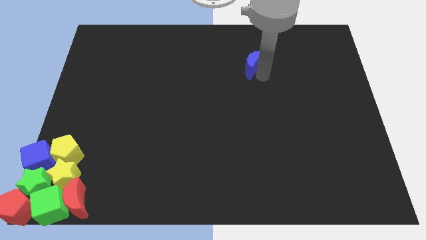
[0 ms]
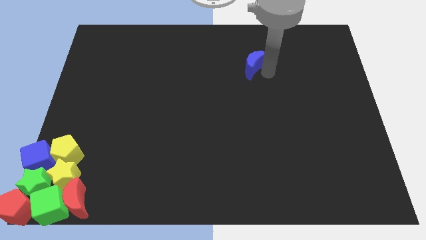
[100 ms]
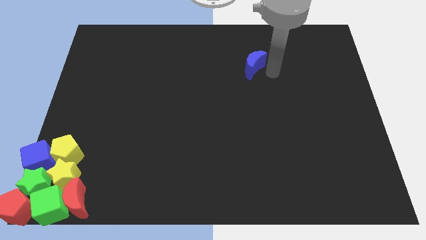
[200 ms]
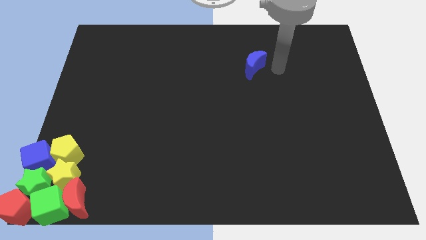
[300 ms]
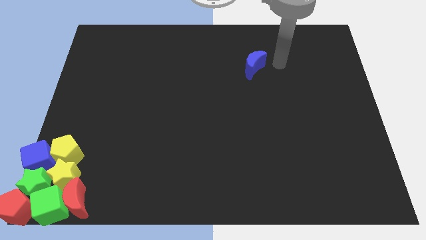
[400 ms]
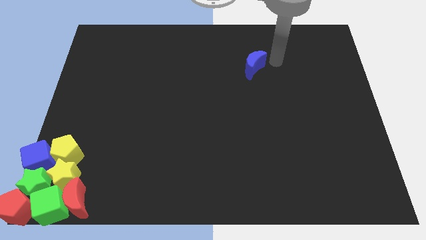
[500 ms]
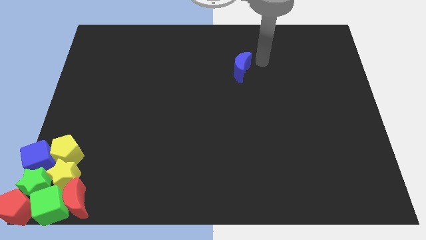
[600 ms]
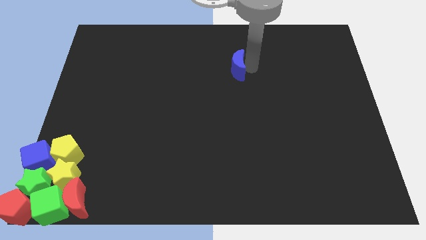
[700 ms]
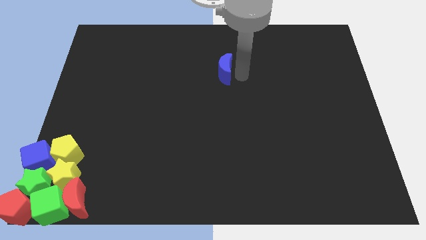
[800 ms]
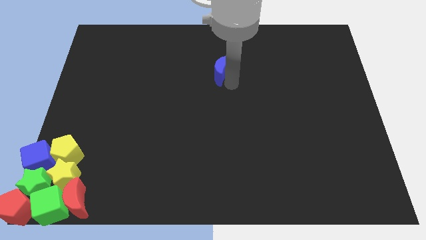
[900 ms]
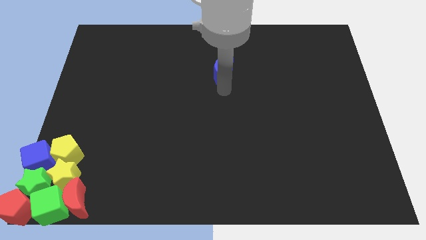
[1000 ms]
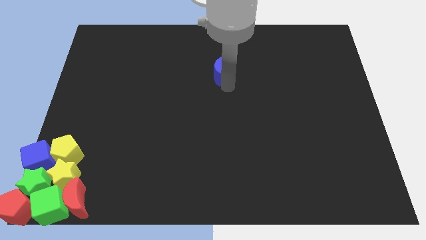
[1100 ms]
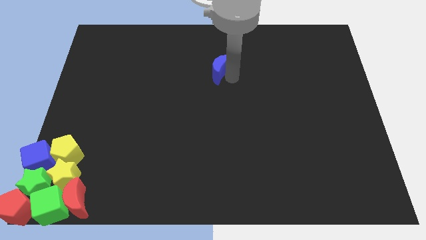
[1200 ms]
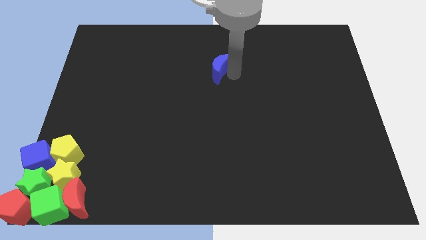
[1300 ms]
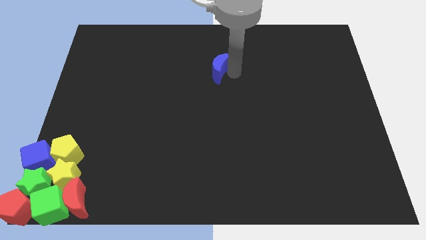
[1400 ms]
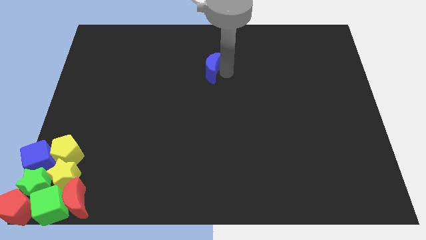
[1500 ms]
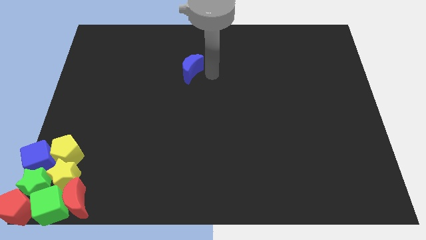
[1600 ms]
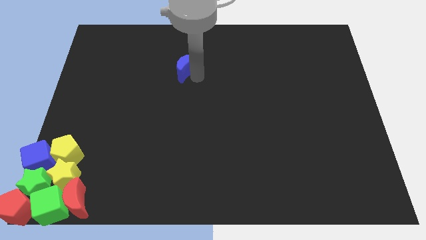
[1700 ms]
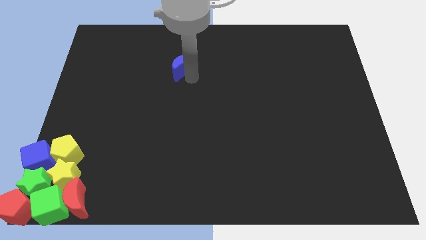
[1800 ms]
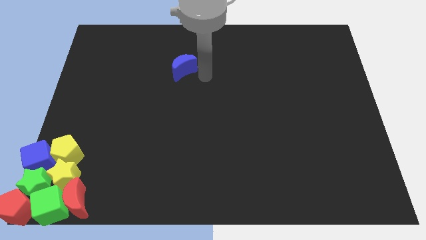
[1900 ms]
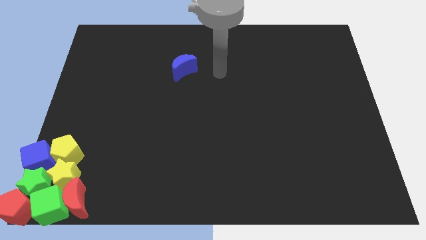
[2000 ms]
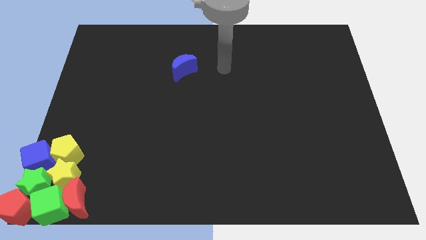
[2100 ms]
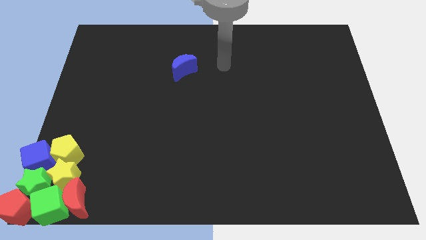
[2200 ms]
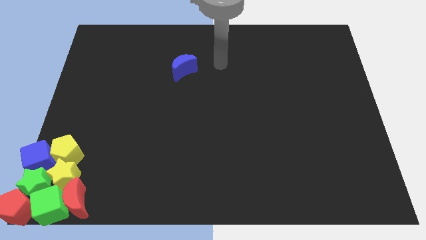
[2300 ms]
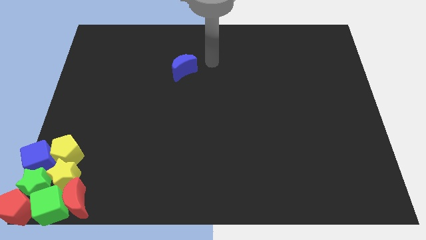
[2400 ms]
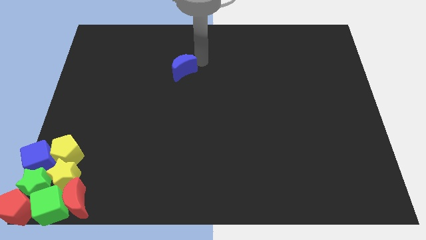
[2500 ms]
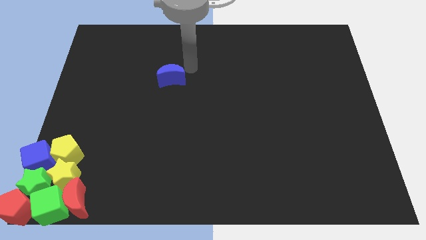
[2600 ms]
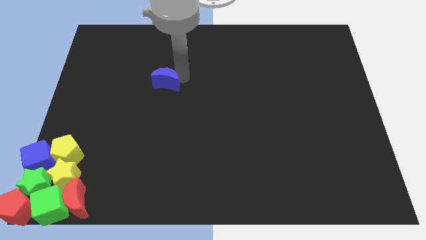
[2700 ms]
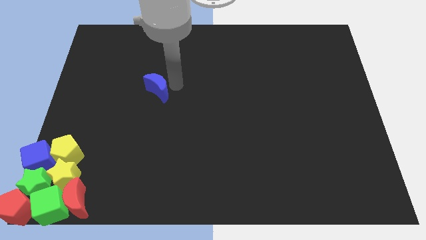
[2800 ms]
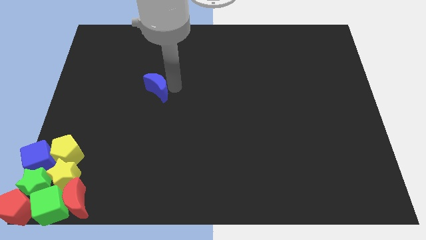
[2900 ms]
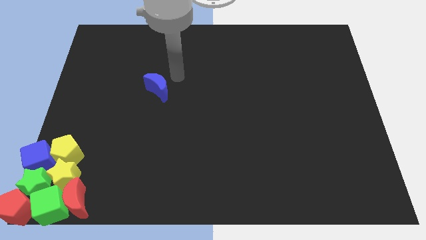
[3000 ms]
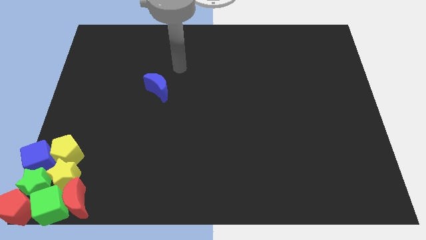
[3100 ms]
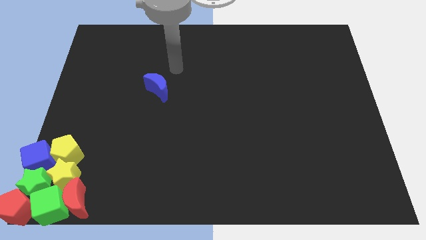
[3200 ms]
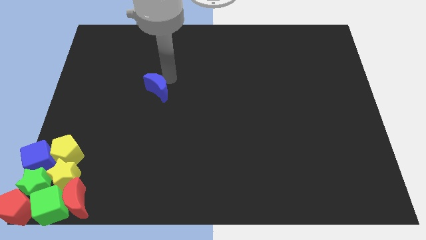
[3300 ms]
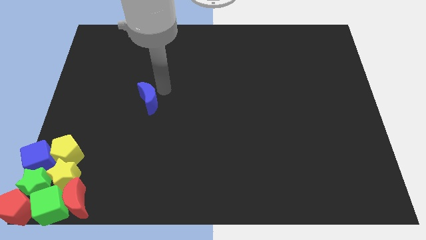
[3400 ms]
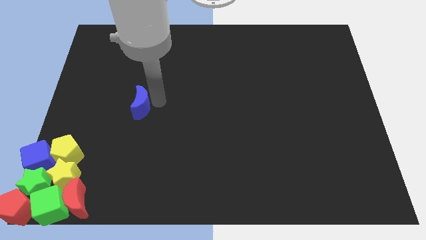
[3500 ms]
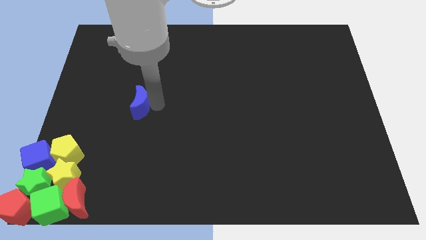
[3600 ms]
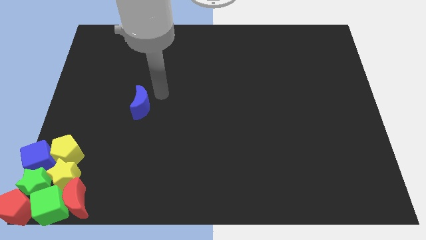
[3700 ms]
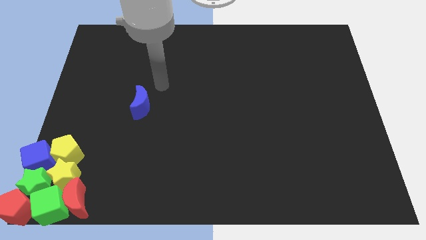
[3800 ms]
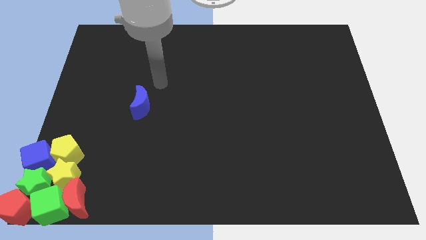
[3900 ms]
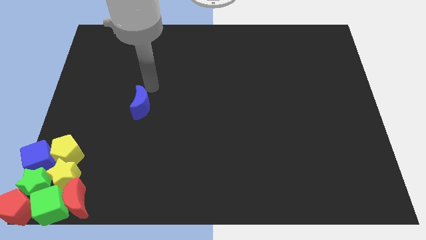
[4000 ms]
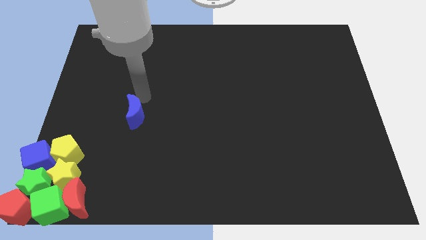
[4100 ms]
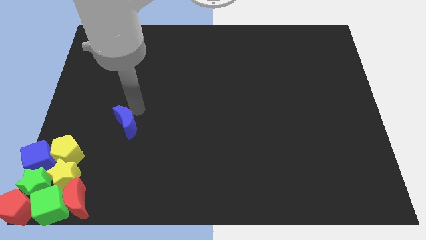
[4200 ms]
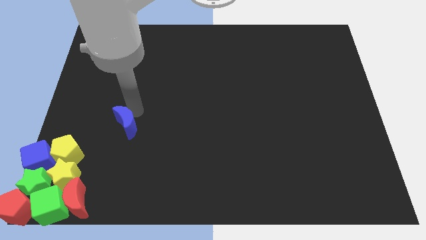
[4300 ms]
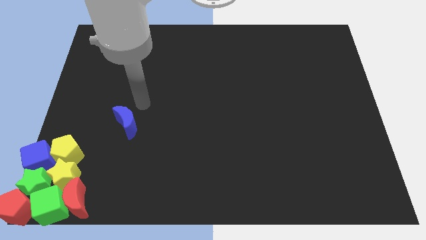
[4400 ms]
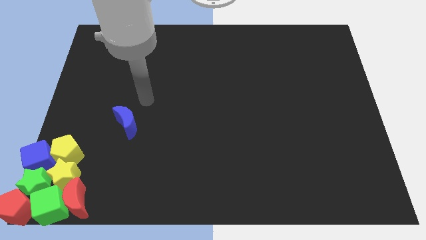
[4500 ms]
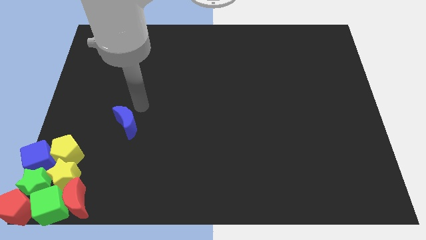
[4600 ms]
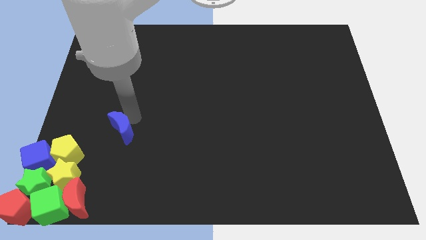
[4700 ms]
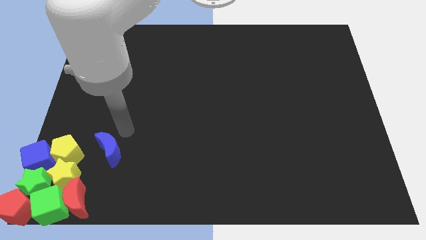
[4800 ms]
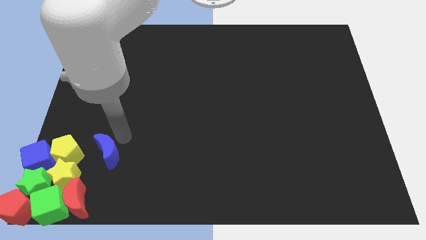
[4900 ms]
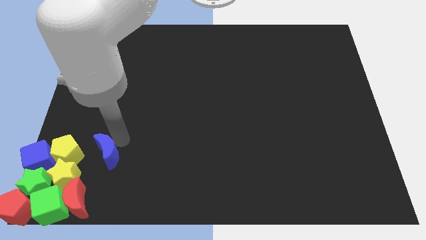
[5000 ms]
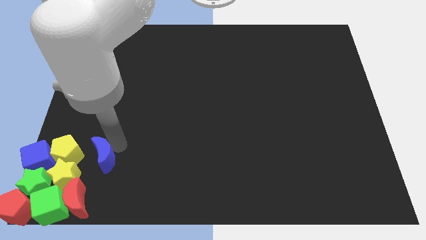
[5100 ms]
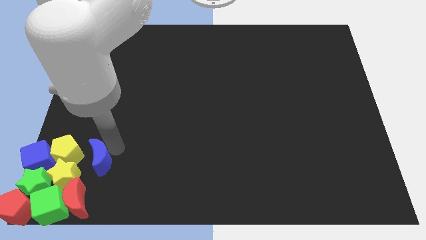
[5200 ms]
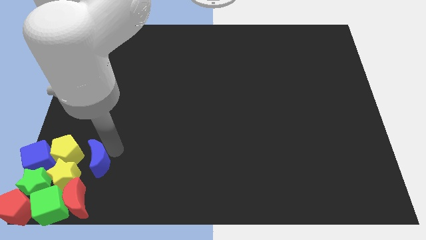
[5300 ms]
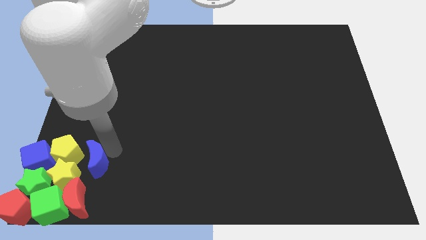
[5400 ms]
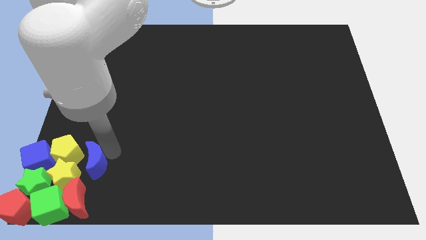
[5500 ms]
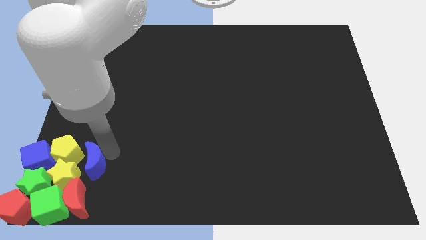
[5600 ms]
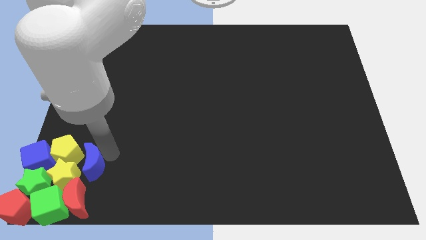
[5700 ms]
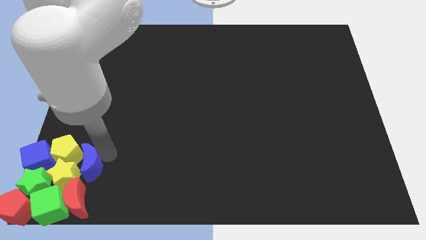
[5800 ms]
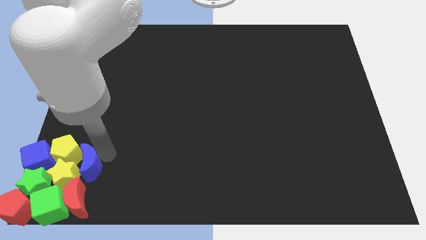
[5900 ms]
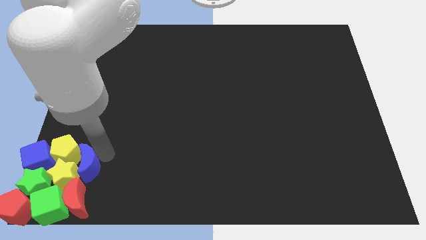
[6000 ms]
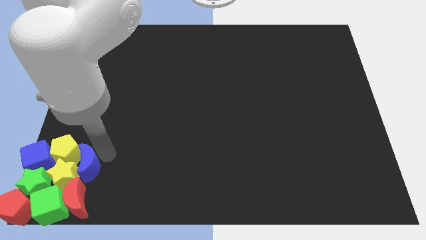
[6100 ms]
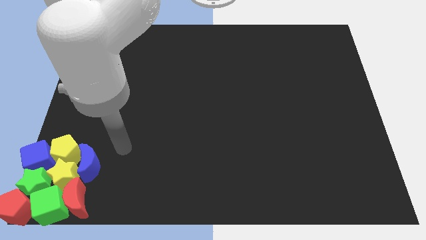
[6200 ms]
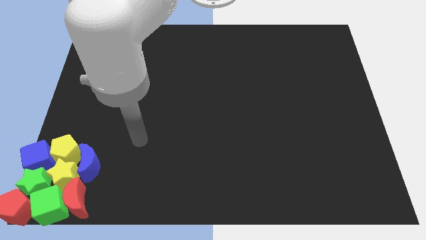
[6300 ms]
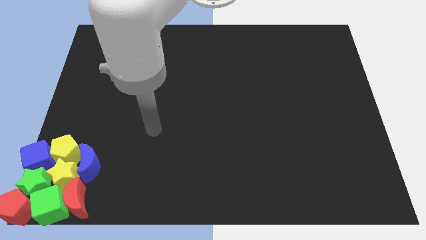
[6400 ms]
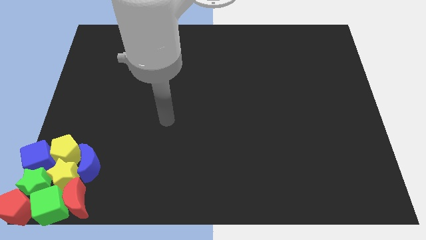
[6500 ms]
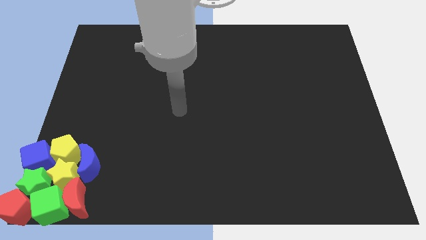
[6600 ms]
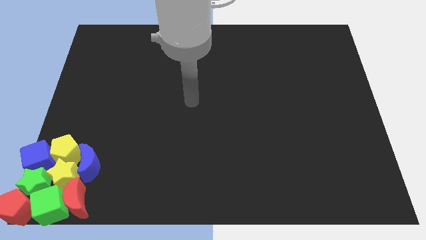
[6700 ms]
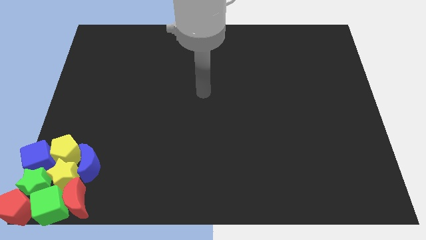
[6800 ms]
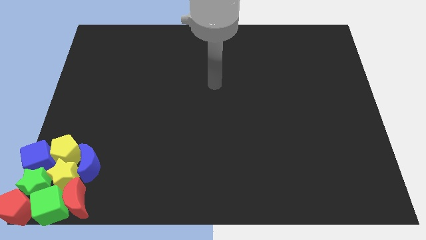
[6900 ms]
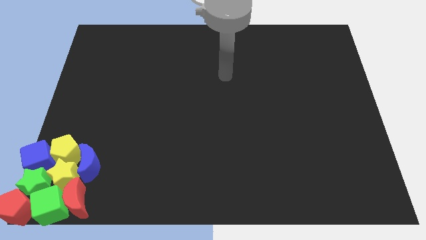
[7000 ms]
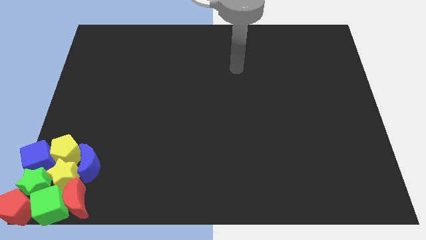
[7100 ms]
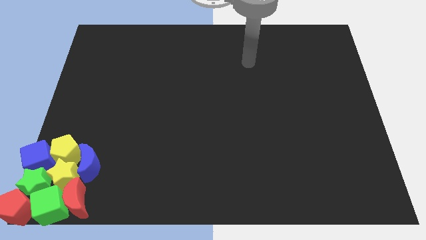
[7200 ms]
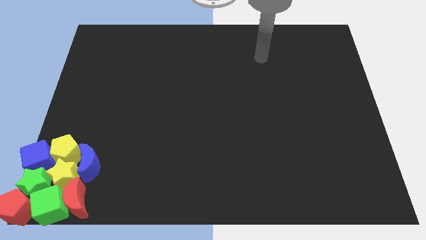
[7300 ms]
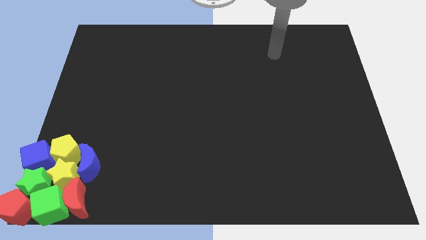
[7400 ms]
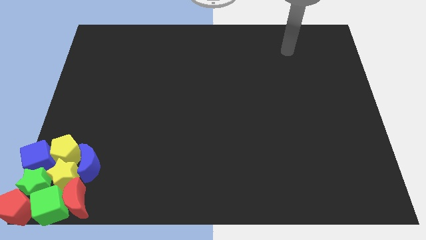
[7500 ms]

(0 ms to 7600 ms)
move the blue crescent to the group of blocks

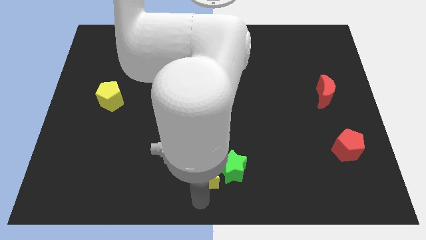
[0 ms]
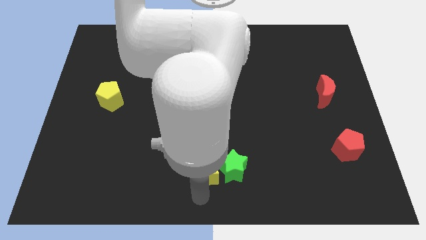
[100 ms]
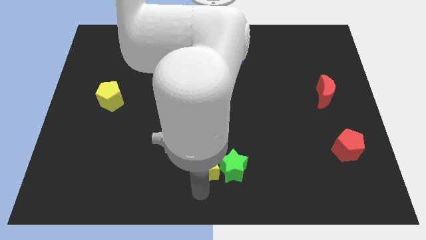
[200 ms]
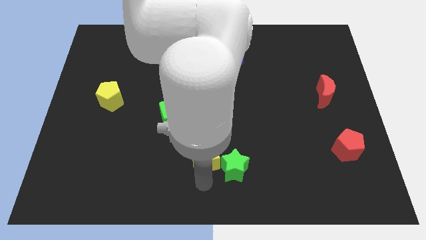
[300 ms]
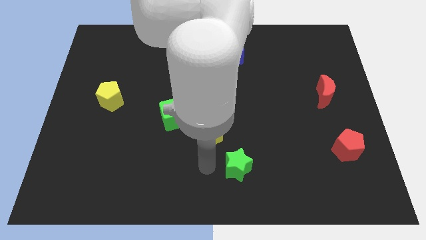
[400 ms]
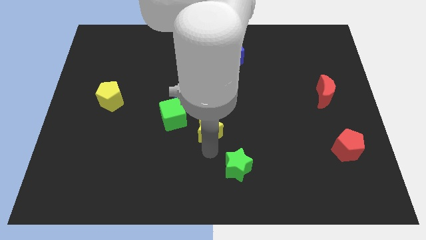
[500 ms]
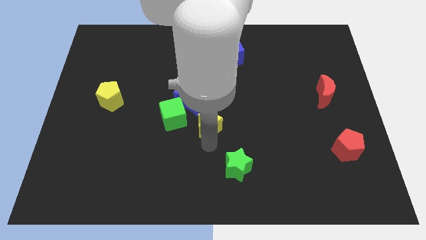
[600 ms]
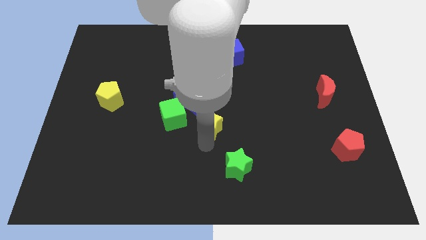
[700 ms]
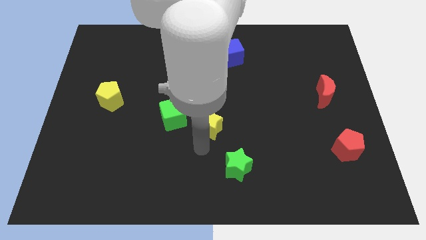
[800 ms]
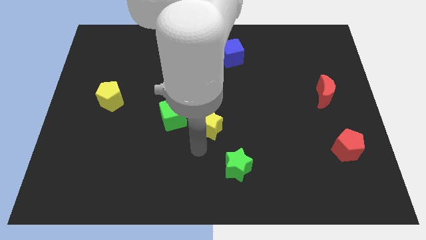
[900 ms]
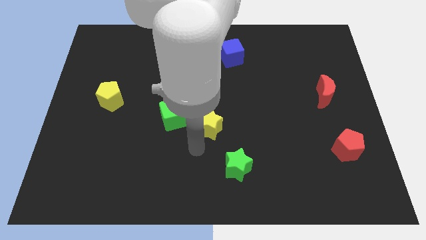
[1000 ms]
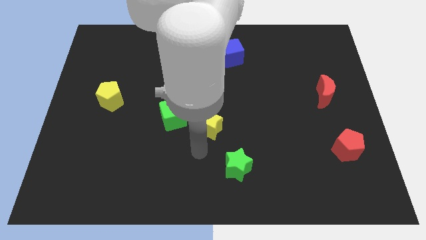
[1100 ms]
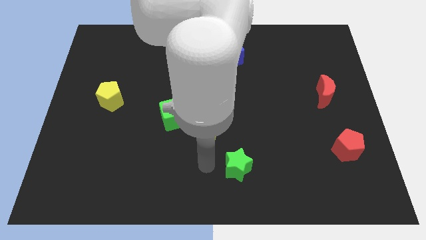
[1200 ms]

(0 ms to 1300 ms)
push the yellow star to the center
